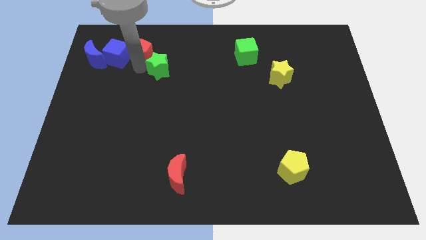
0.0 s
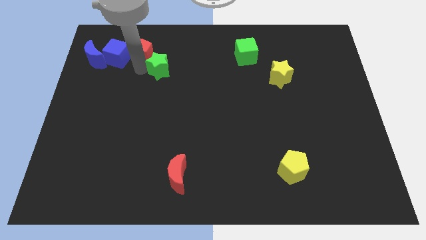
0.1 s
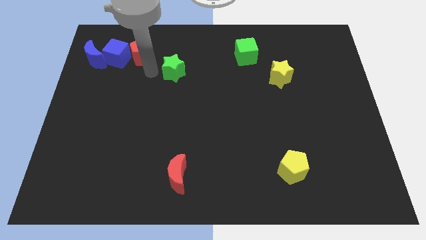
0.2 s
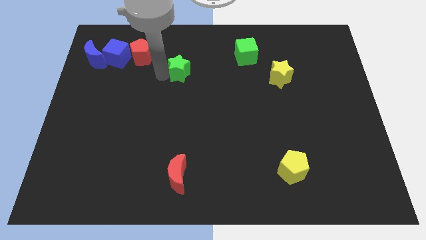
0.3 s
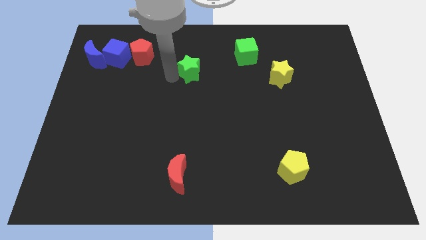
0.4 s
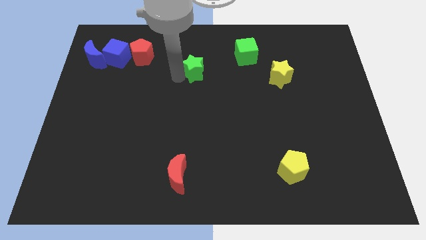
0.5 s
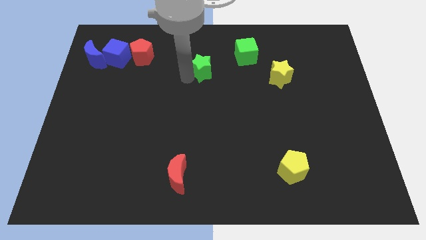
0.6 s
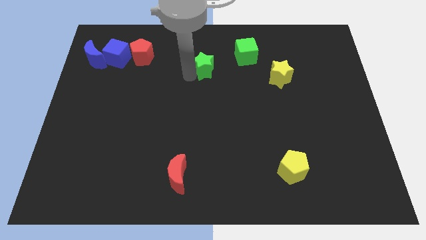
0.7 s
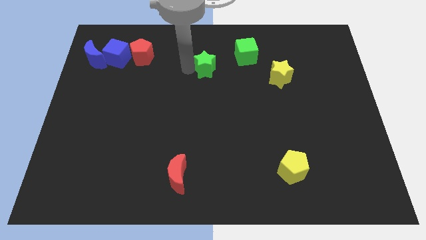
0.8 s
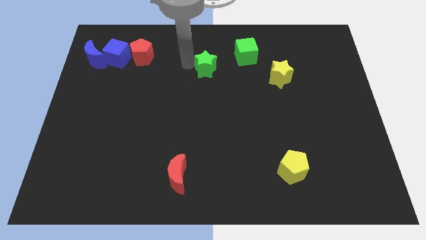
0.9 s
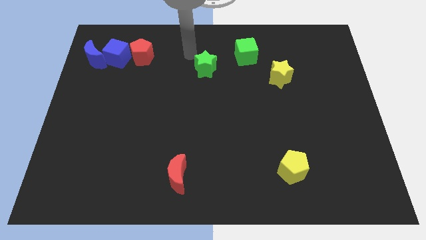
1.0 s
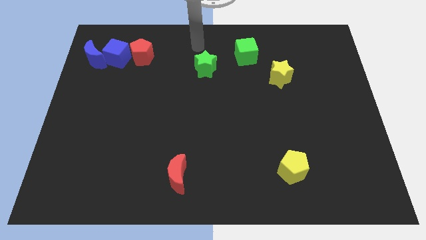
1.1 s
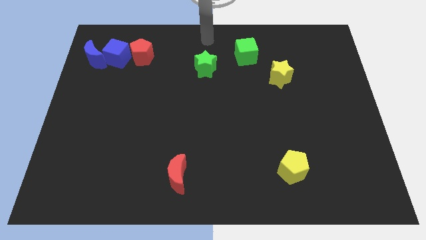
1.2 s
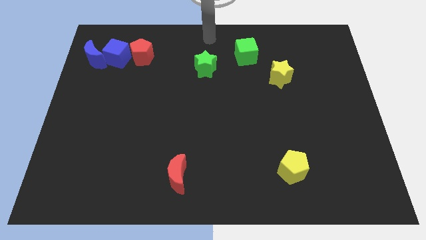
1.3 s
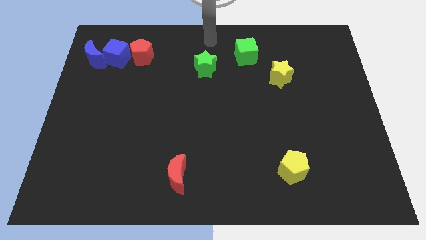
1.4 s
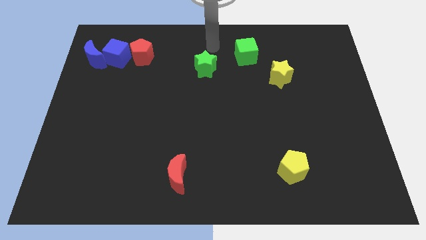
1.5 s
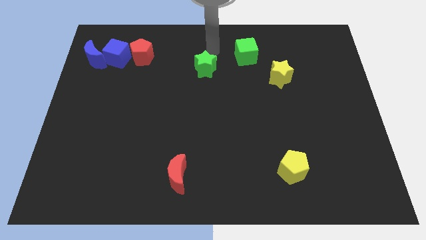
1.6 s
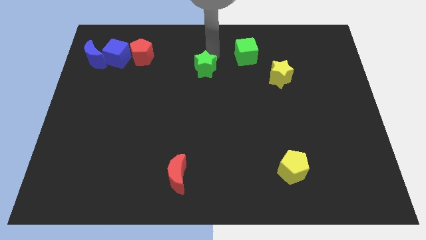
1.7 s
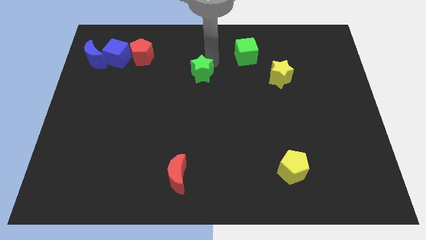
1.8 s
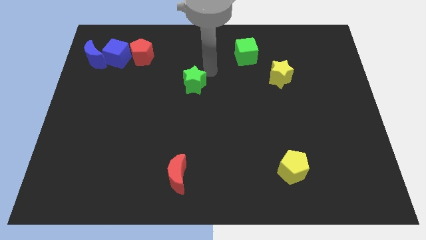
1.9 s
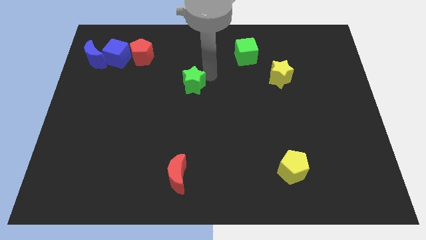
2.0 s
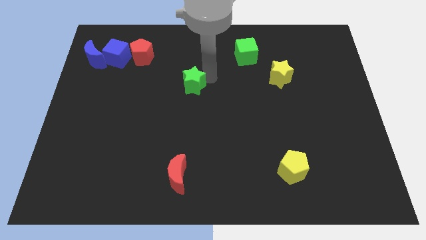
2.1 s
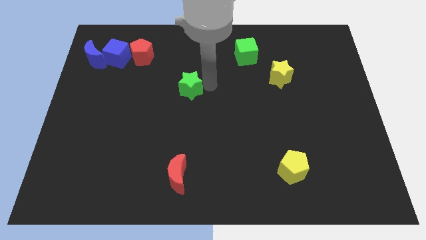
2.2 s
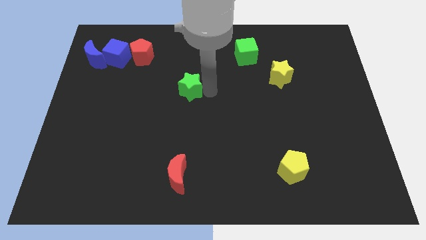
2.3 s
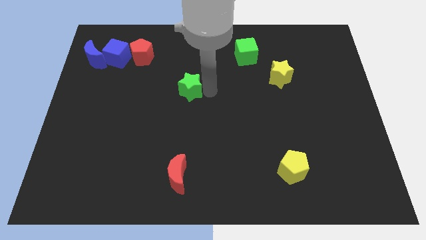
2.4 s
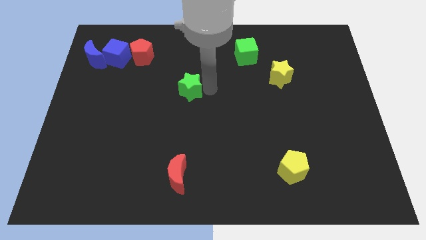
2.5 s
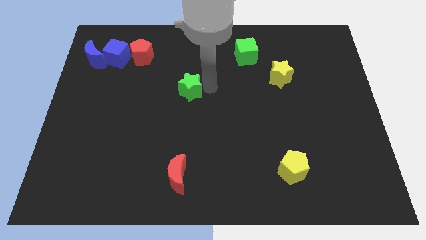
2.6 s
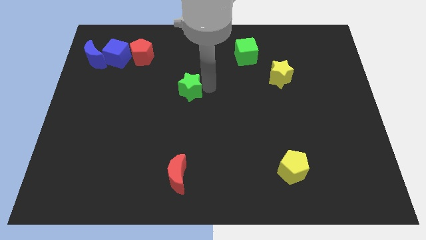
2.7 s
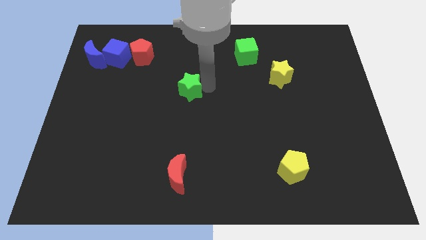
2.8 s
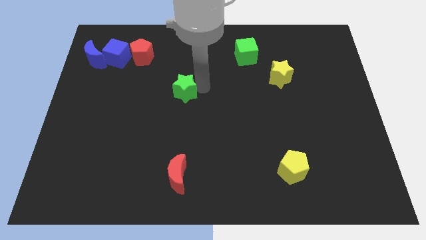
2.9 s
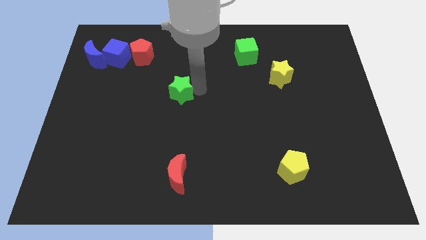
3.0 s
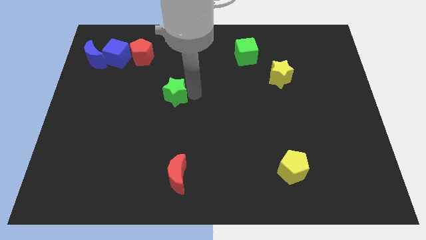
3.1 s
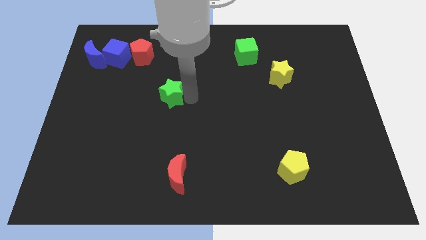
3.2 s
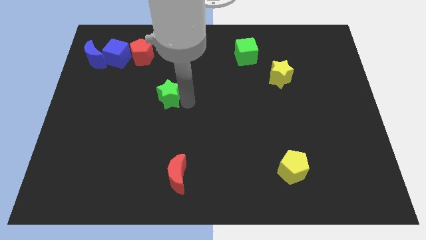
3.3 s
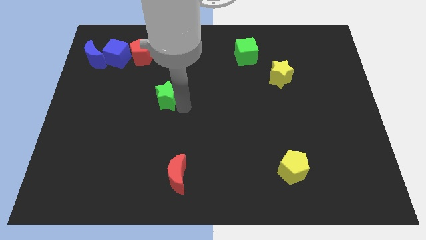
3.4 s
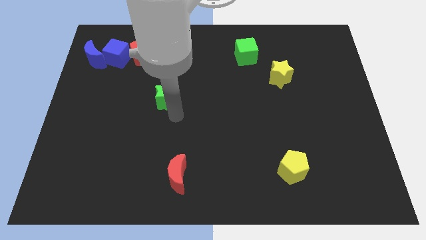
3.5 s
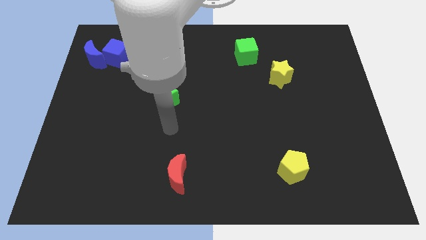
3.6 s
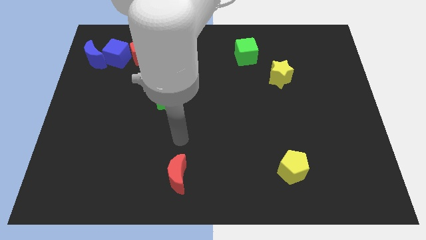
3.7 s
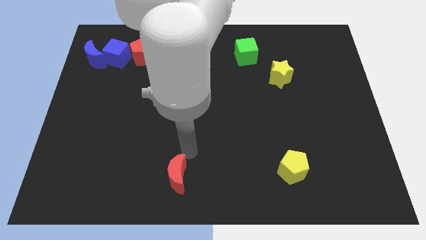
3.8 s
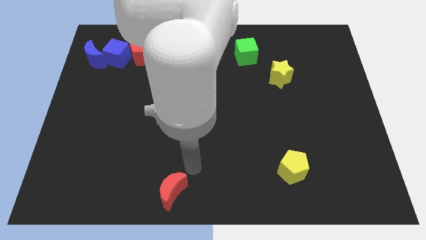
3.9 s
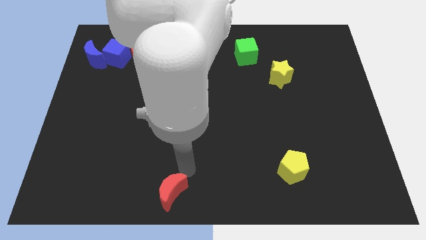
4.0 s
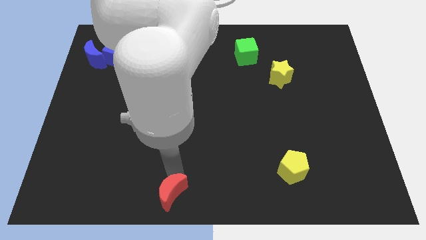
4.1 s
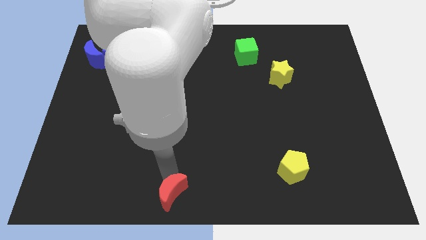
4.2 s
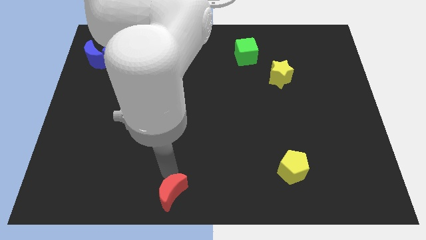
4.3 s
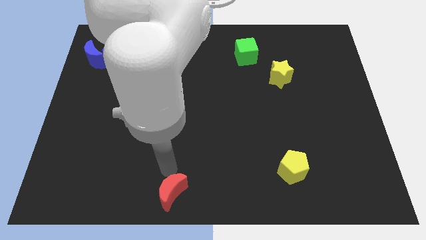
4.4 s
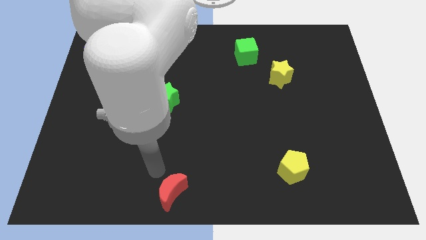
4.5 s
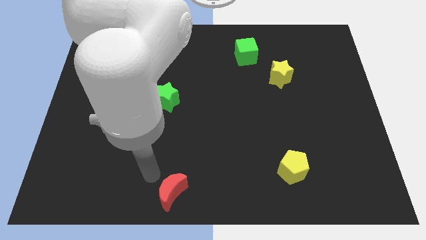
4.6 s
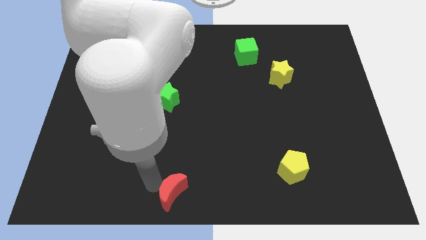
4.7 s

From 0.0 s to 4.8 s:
separate the green star from the group of blocks

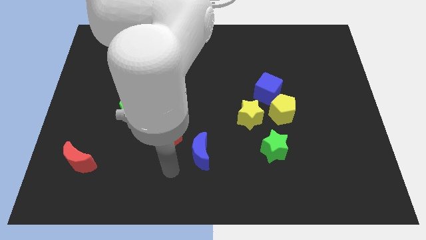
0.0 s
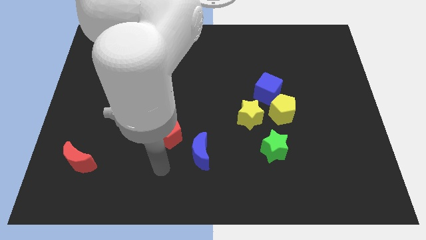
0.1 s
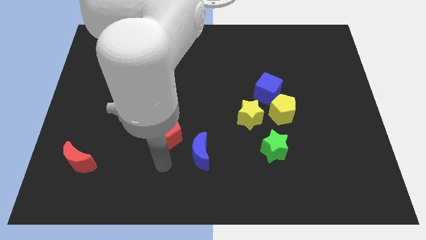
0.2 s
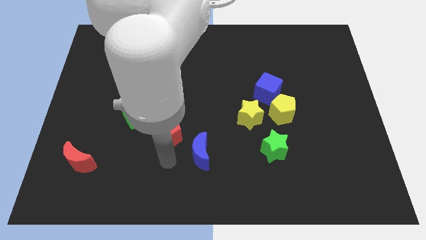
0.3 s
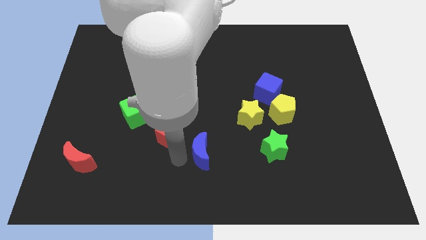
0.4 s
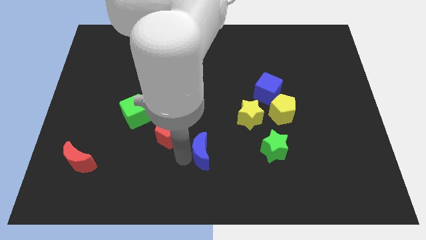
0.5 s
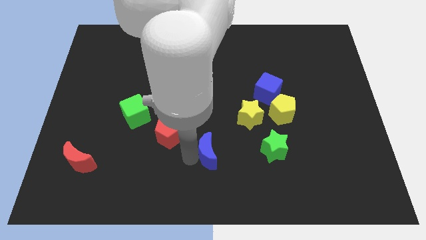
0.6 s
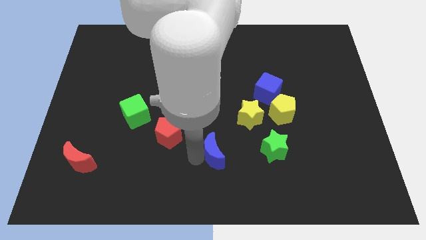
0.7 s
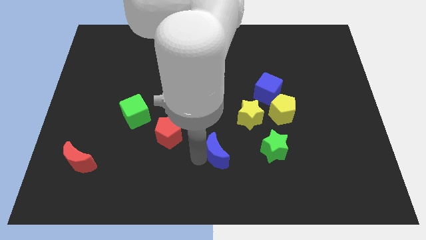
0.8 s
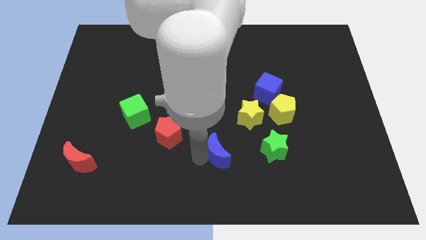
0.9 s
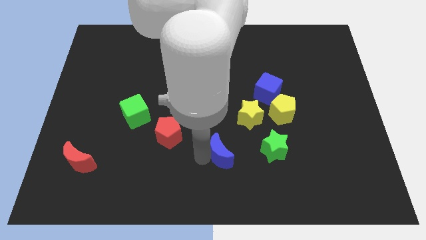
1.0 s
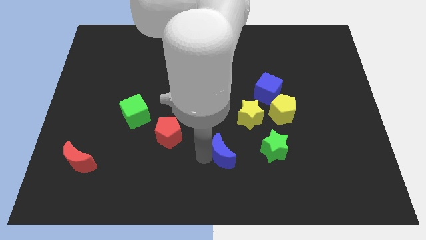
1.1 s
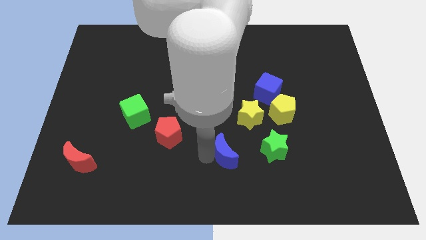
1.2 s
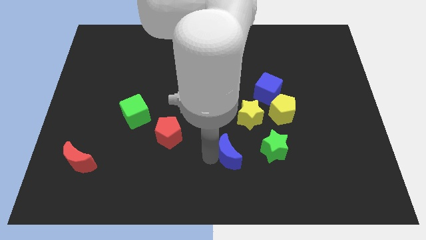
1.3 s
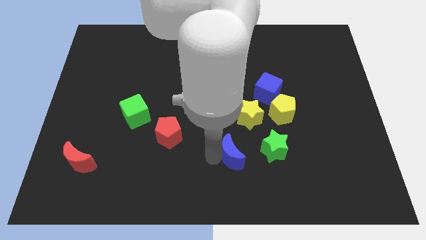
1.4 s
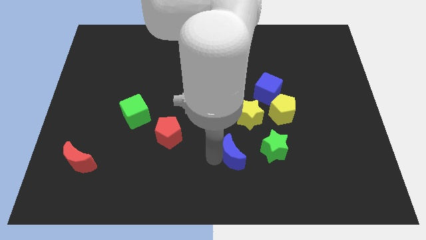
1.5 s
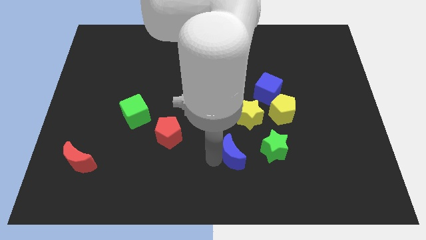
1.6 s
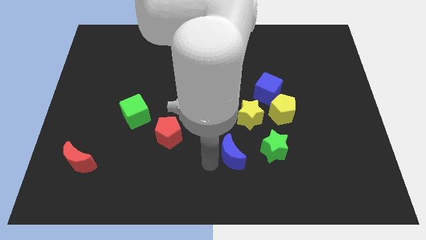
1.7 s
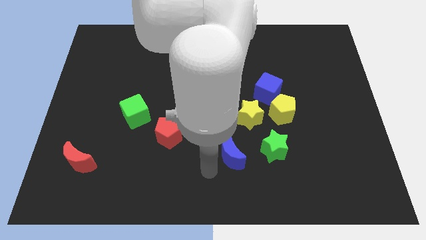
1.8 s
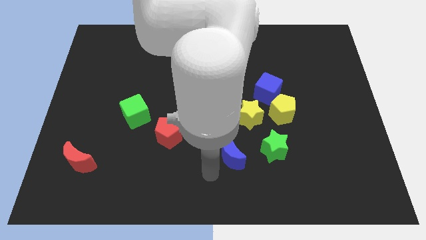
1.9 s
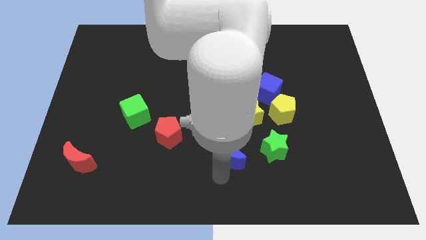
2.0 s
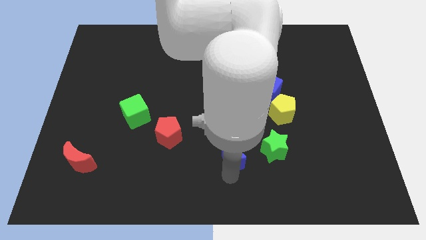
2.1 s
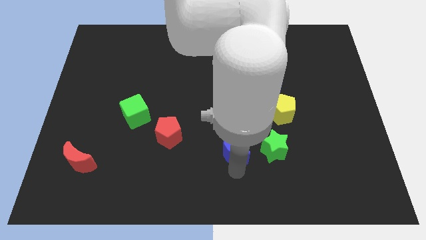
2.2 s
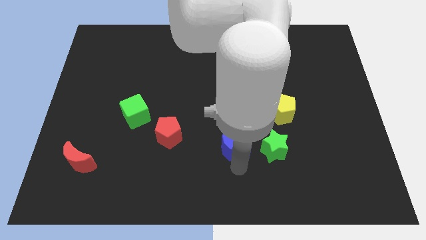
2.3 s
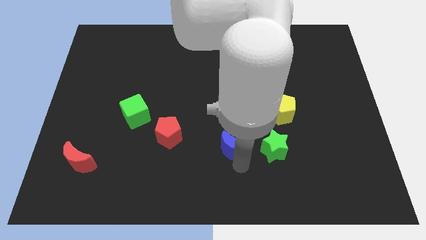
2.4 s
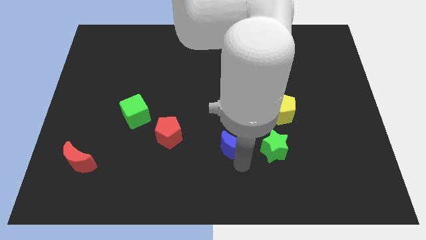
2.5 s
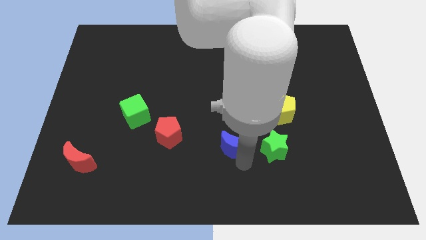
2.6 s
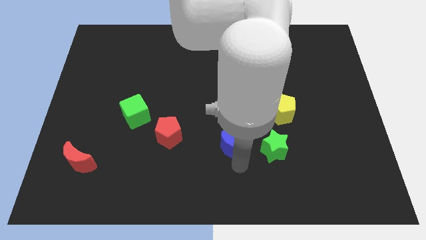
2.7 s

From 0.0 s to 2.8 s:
push blue moon beside green star

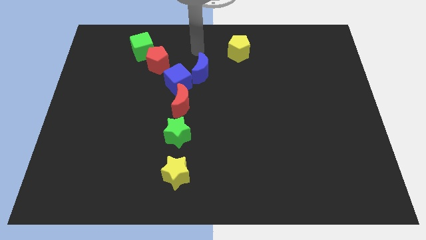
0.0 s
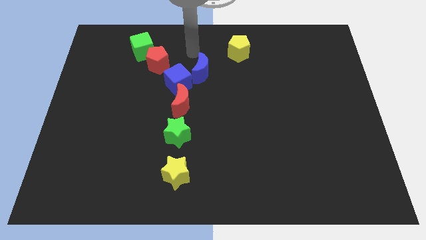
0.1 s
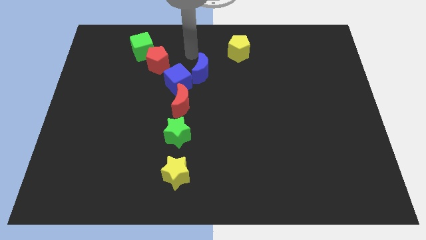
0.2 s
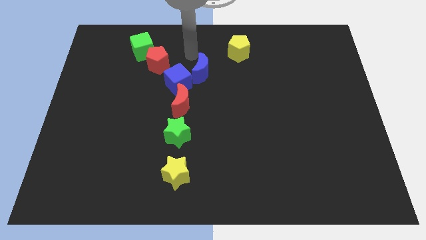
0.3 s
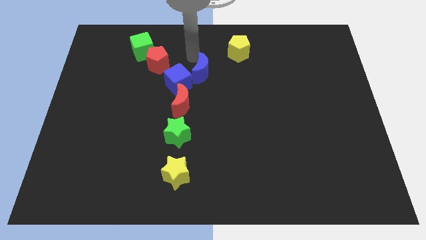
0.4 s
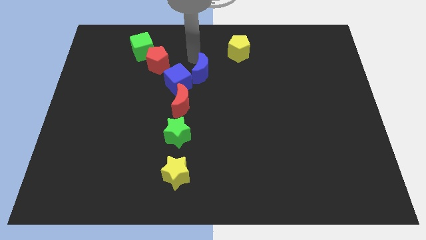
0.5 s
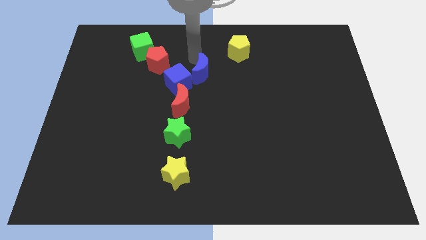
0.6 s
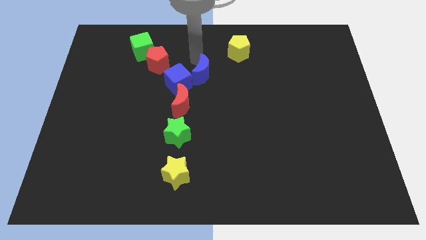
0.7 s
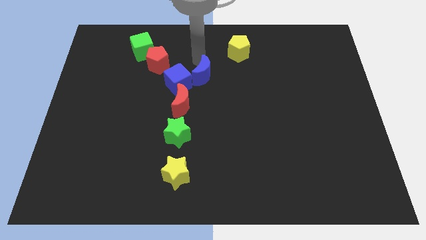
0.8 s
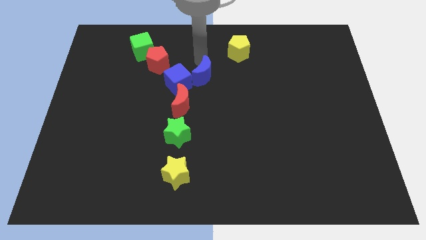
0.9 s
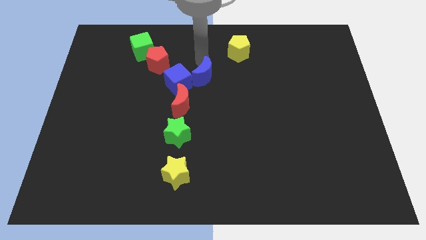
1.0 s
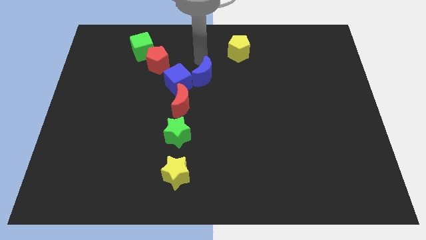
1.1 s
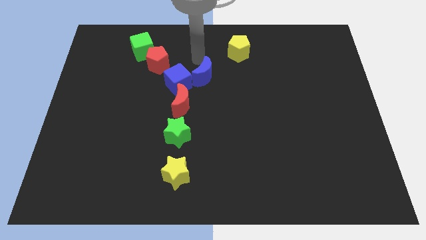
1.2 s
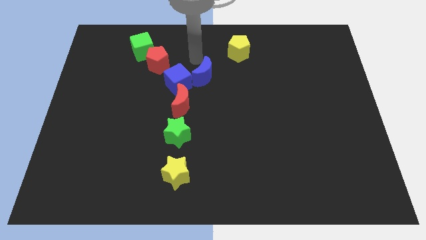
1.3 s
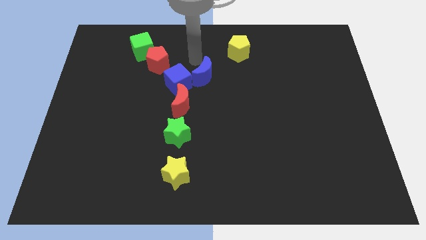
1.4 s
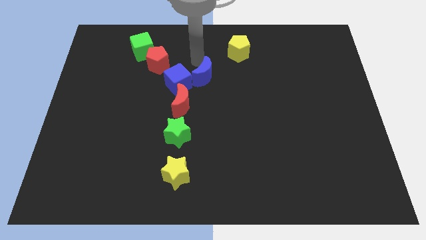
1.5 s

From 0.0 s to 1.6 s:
push the blue crescent slightly to the bottom side of the board
